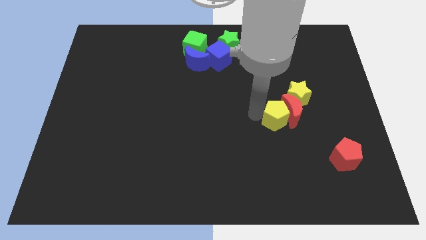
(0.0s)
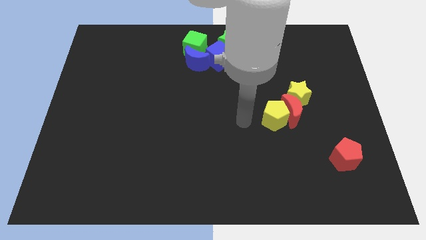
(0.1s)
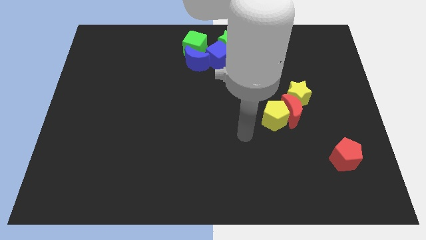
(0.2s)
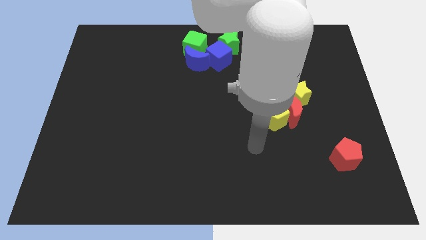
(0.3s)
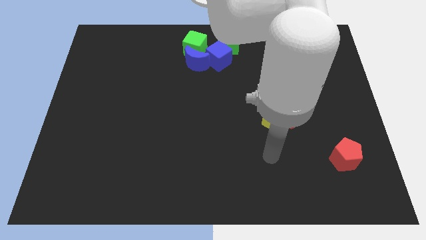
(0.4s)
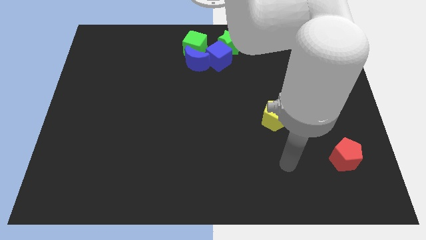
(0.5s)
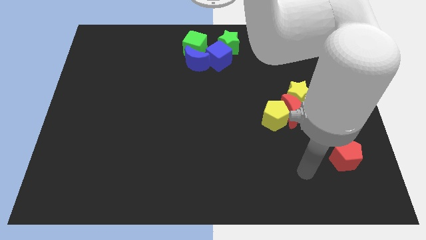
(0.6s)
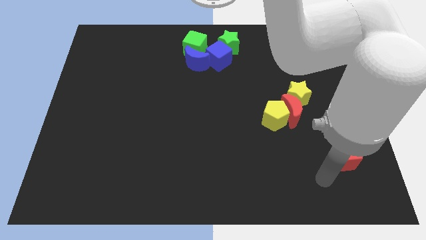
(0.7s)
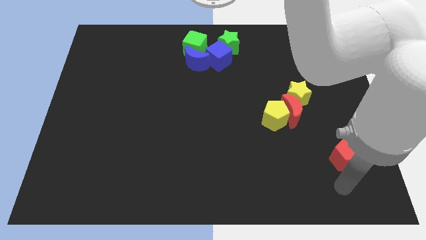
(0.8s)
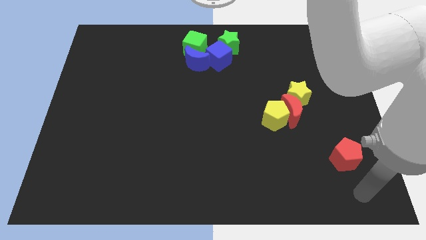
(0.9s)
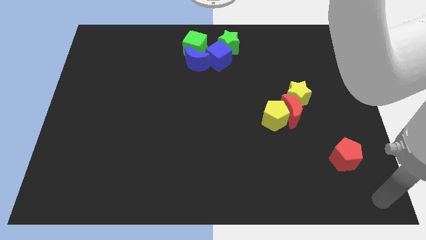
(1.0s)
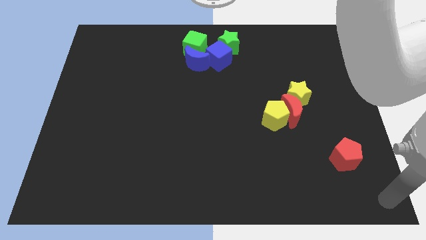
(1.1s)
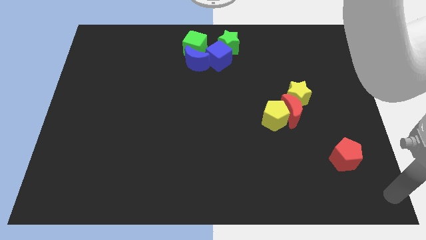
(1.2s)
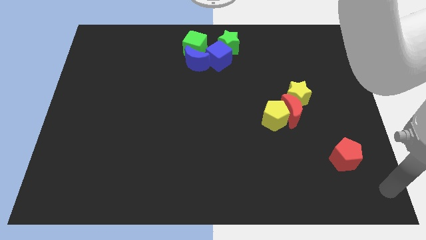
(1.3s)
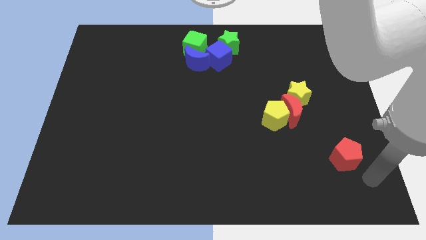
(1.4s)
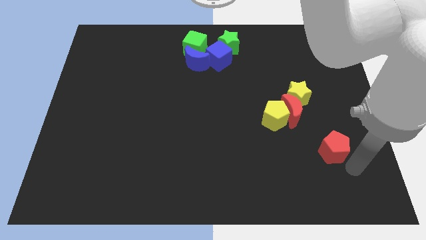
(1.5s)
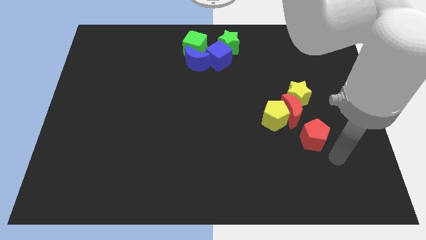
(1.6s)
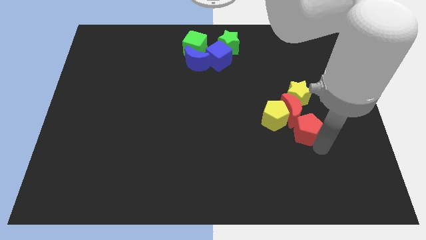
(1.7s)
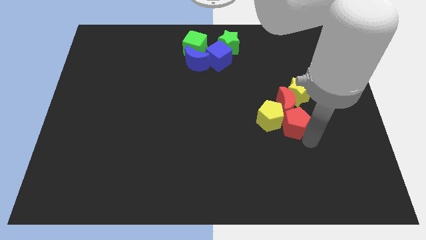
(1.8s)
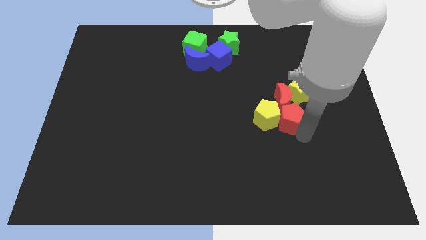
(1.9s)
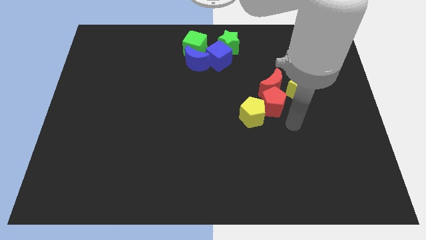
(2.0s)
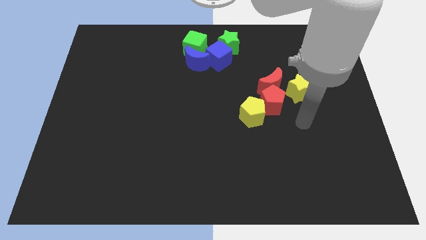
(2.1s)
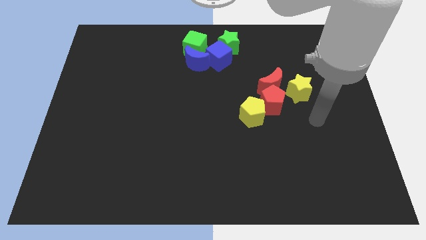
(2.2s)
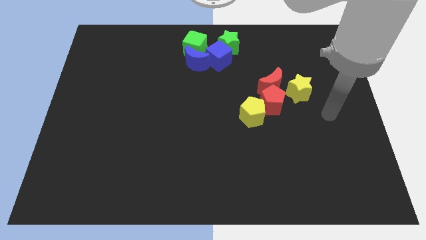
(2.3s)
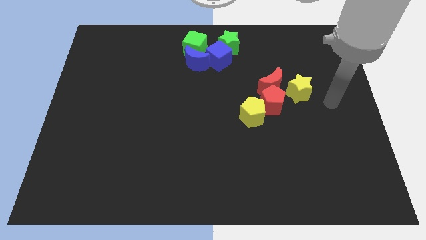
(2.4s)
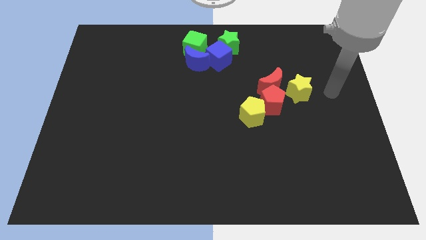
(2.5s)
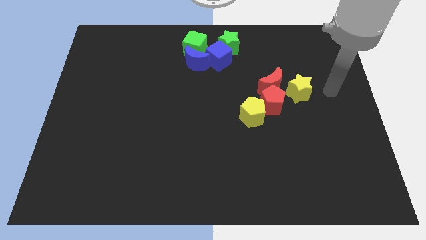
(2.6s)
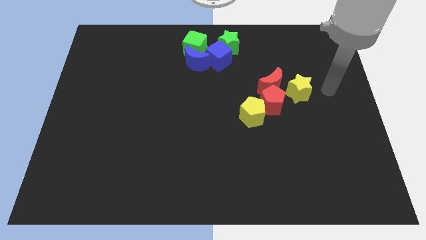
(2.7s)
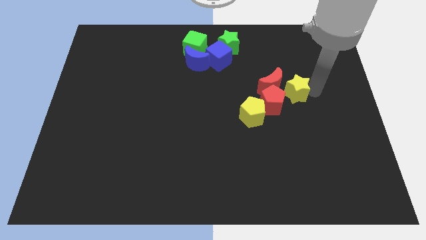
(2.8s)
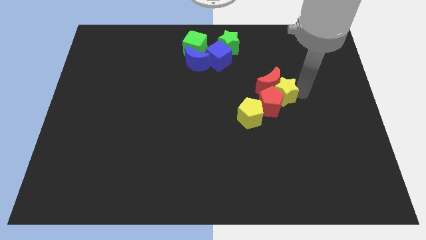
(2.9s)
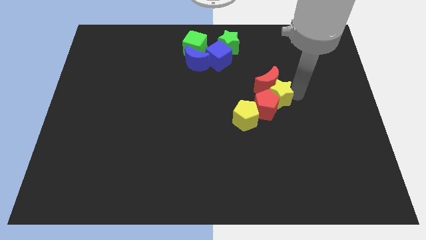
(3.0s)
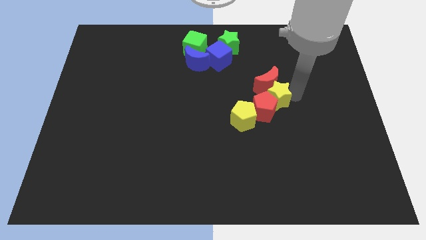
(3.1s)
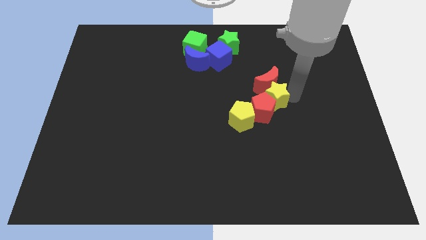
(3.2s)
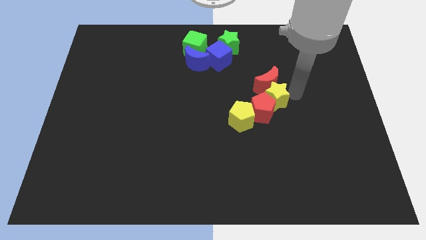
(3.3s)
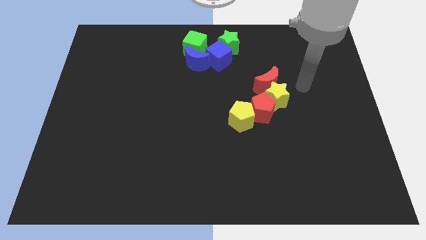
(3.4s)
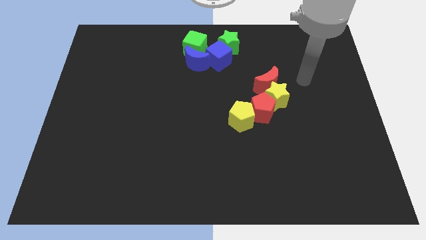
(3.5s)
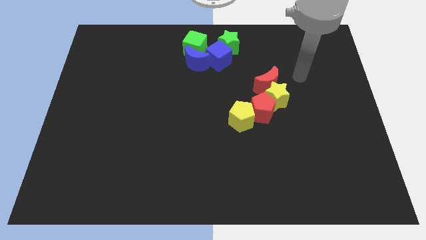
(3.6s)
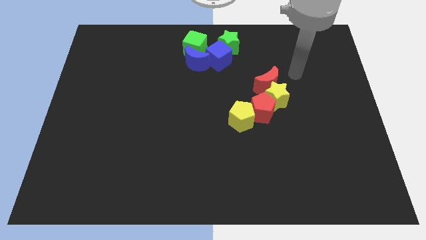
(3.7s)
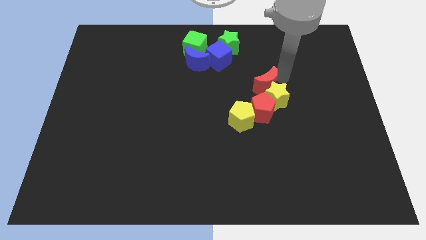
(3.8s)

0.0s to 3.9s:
move away from the yellow pentagon

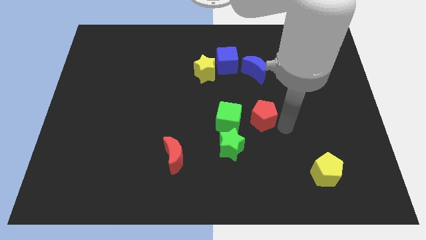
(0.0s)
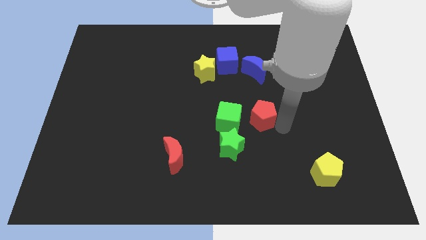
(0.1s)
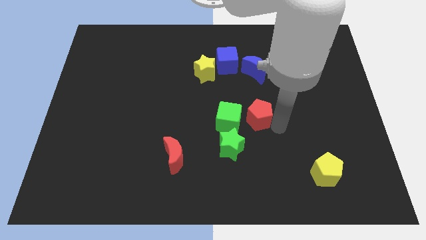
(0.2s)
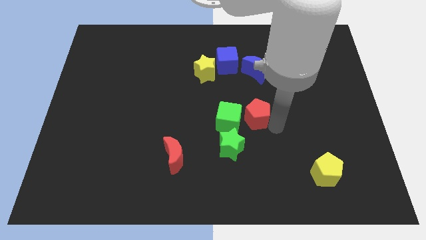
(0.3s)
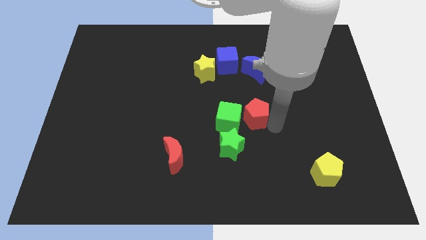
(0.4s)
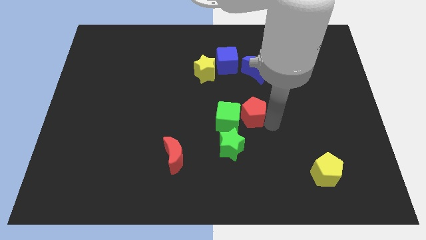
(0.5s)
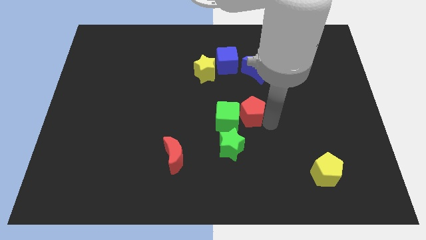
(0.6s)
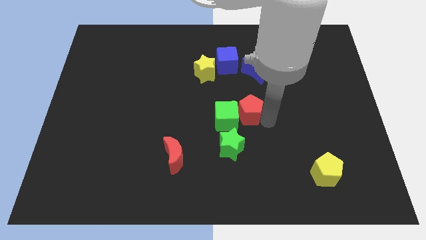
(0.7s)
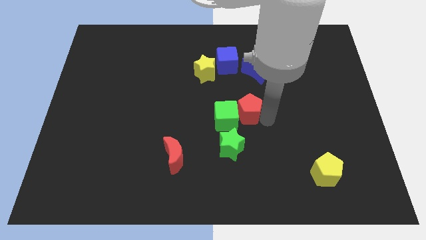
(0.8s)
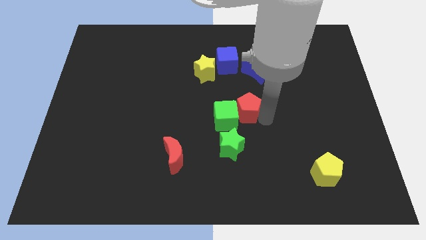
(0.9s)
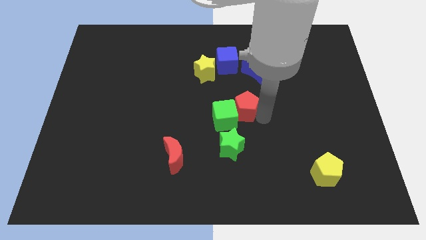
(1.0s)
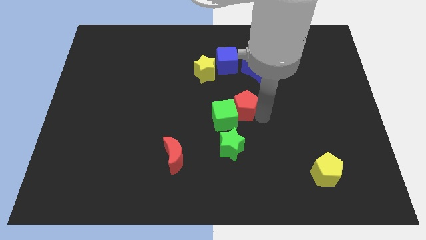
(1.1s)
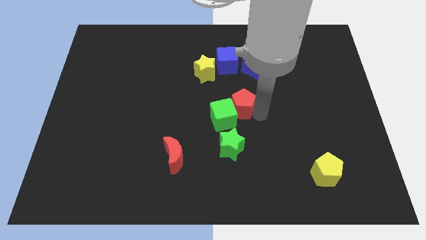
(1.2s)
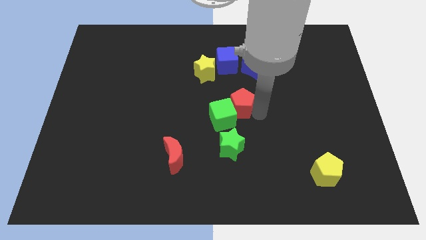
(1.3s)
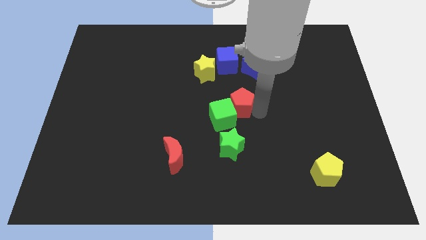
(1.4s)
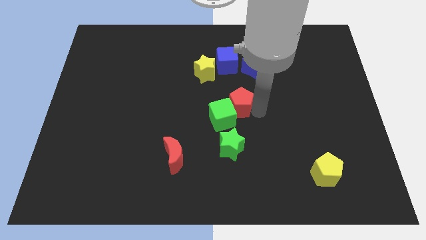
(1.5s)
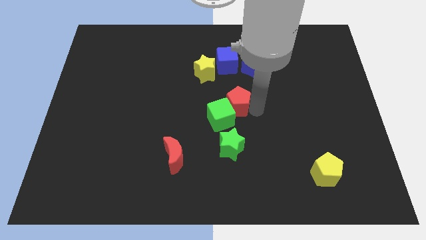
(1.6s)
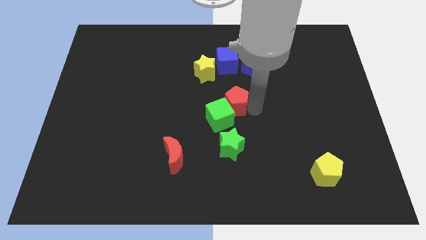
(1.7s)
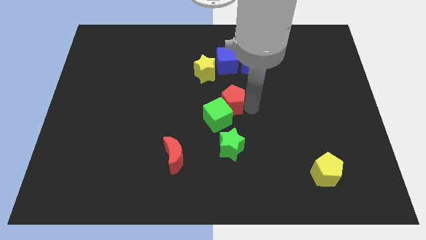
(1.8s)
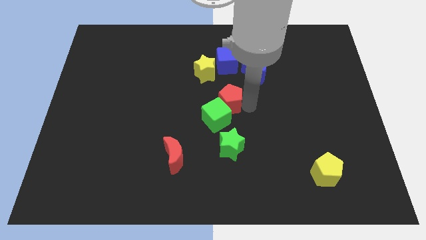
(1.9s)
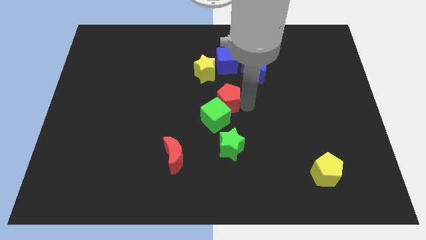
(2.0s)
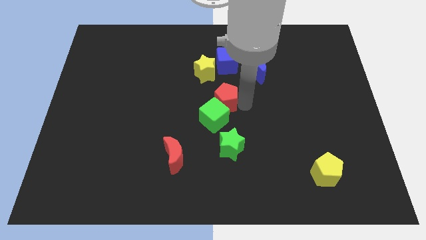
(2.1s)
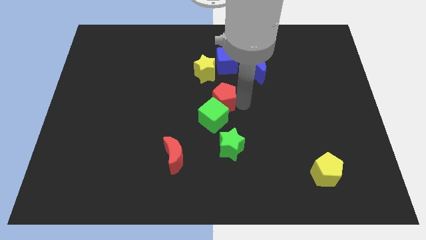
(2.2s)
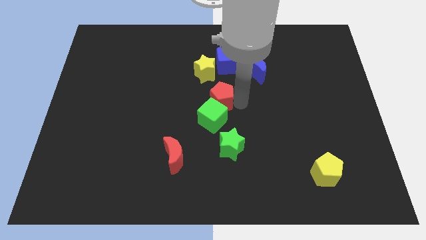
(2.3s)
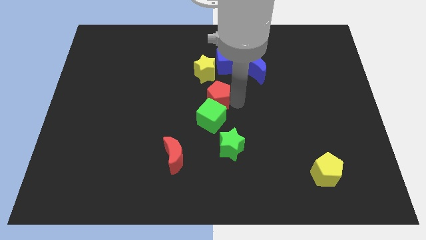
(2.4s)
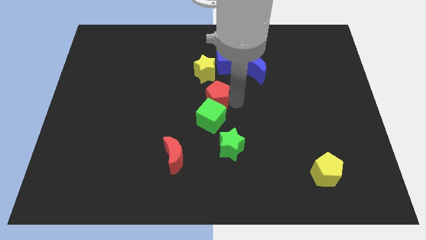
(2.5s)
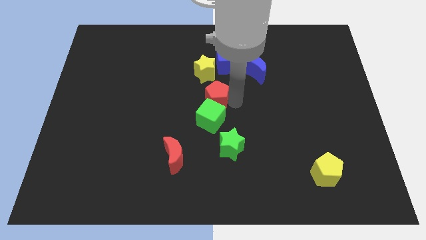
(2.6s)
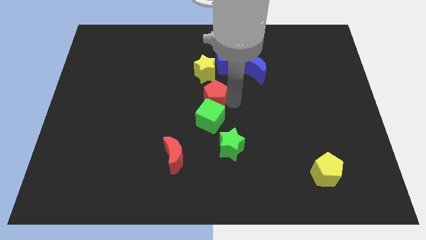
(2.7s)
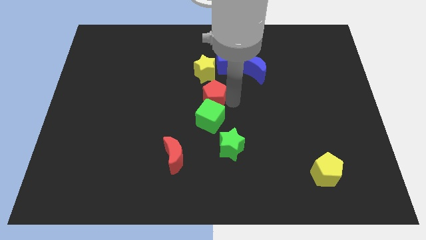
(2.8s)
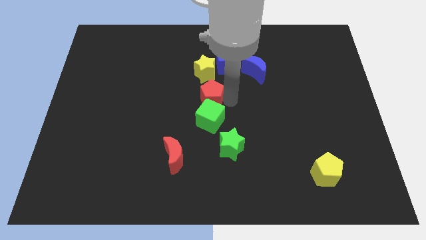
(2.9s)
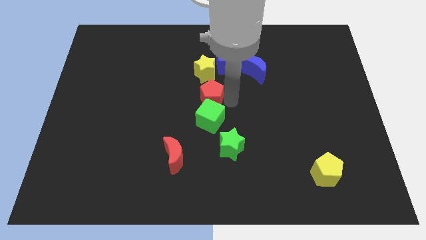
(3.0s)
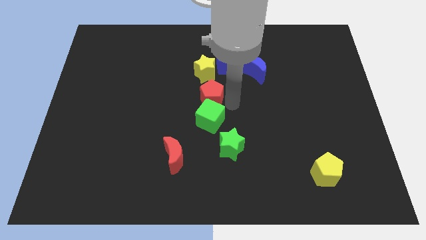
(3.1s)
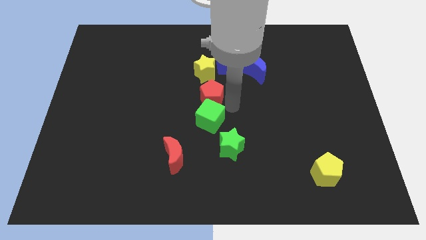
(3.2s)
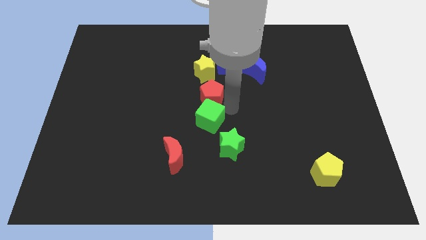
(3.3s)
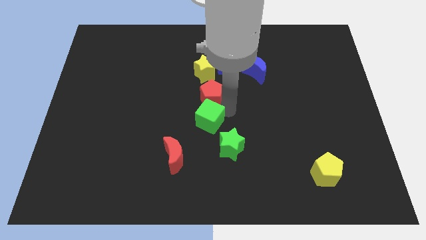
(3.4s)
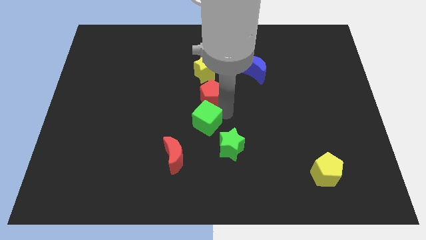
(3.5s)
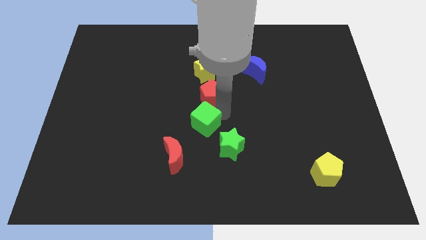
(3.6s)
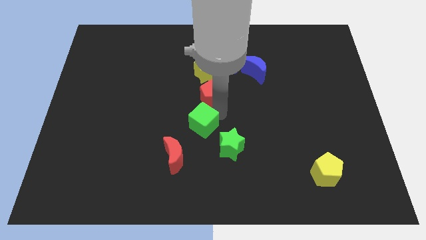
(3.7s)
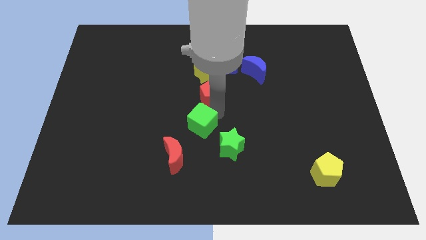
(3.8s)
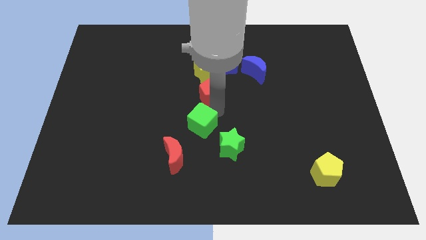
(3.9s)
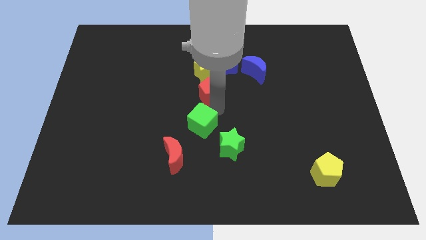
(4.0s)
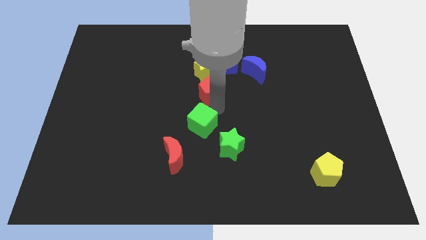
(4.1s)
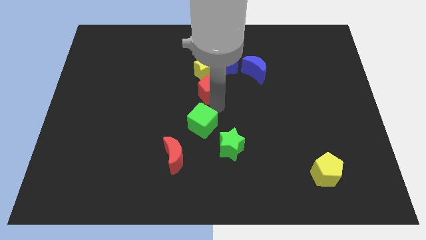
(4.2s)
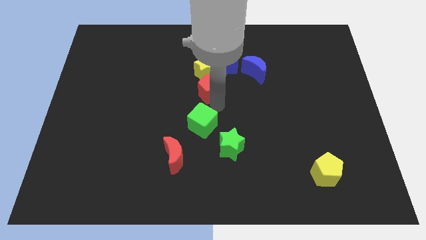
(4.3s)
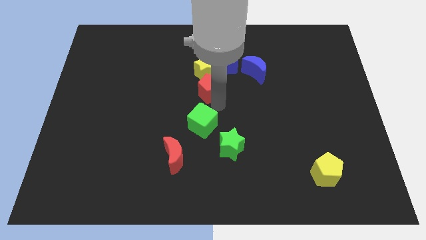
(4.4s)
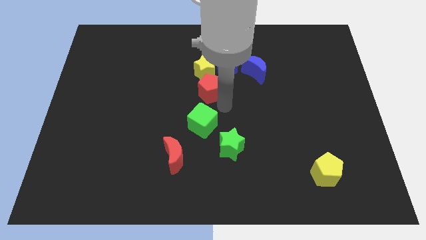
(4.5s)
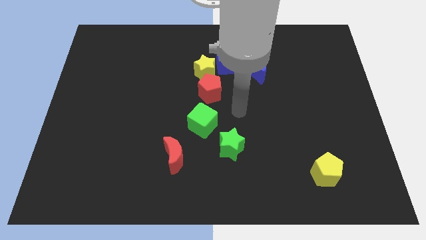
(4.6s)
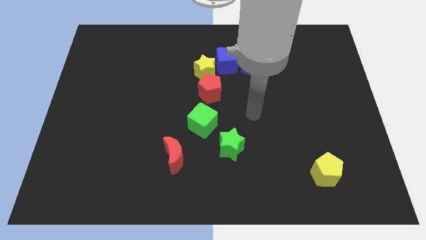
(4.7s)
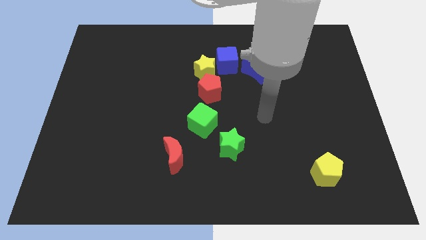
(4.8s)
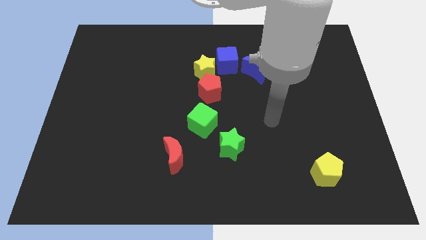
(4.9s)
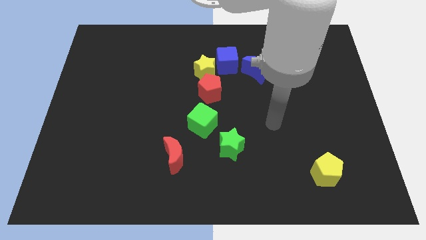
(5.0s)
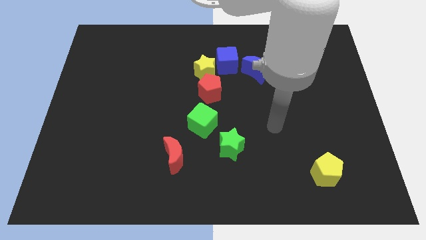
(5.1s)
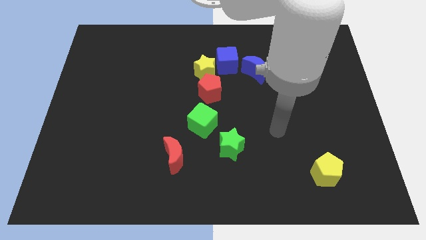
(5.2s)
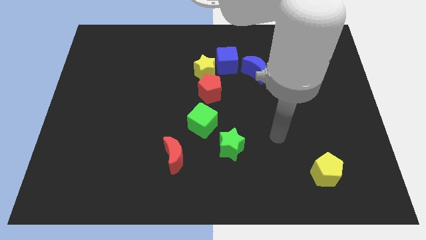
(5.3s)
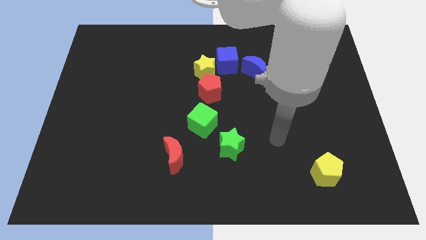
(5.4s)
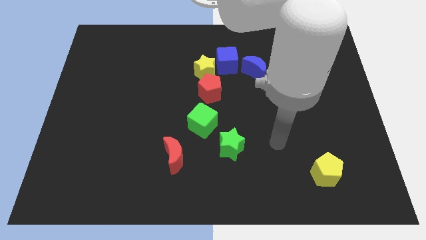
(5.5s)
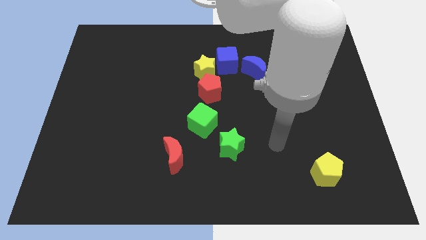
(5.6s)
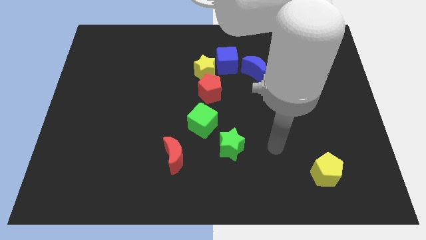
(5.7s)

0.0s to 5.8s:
place the red pentagon below the yellow star
